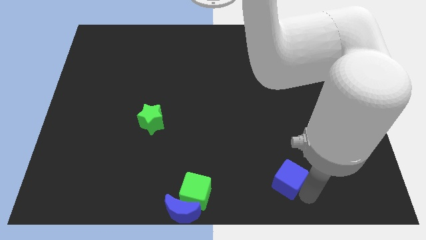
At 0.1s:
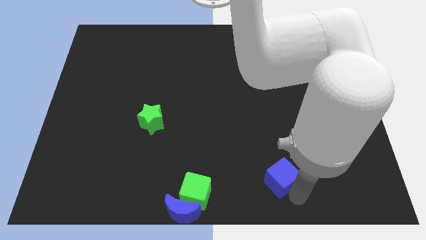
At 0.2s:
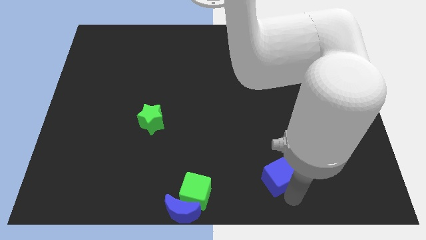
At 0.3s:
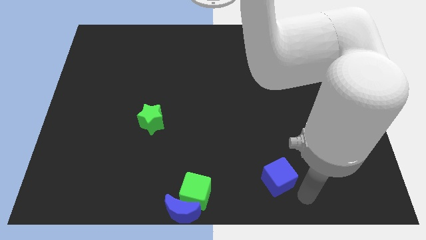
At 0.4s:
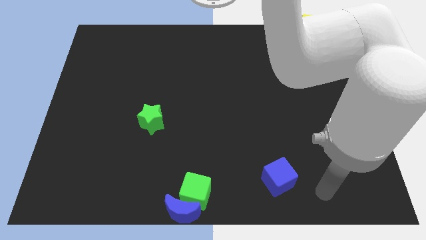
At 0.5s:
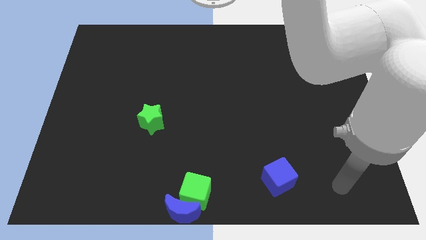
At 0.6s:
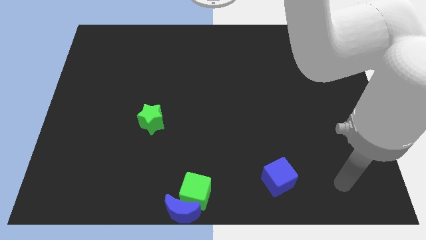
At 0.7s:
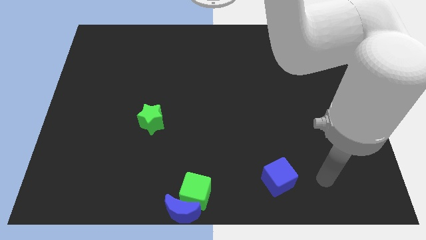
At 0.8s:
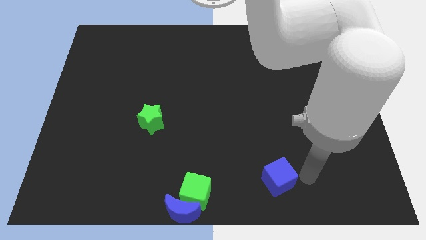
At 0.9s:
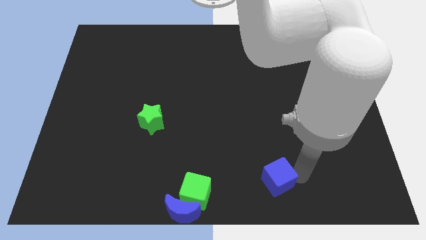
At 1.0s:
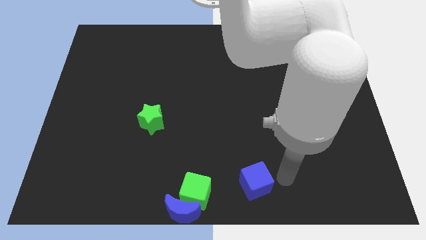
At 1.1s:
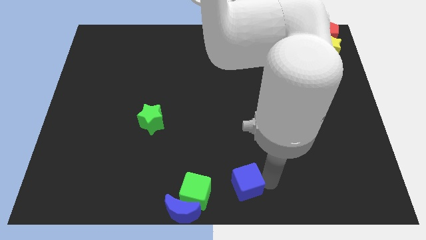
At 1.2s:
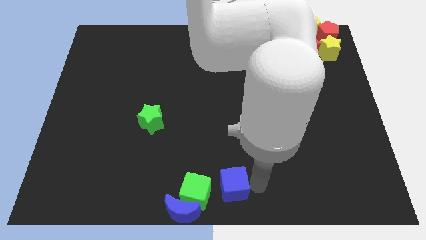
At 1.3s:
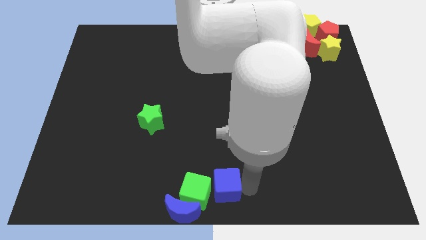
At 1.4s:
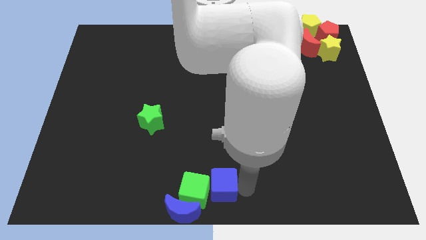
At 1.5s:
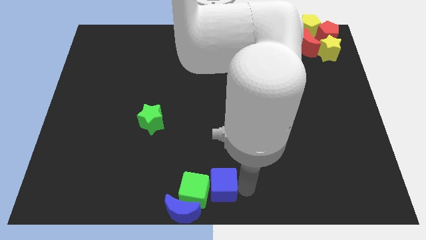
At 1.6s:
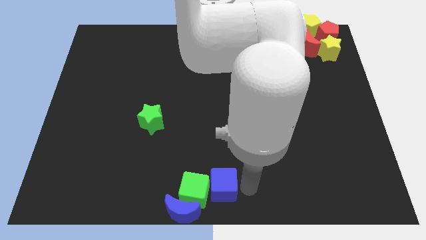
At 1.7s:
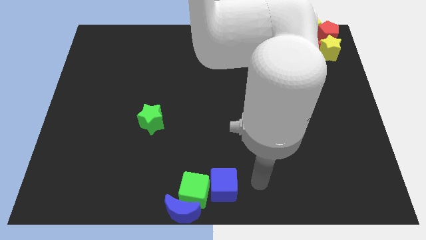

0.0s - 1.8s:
push the blue cube close to green cube

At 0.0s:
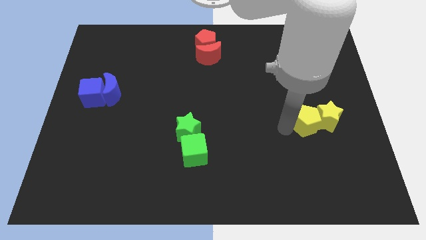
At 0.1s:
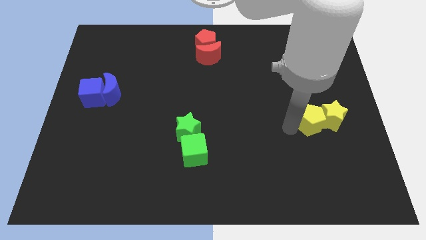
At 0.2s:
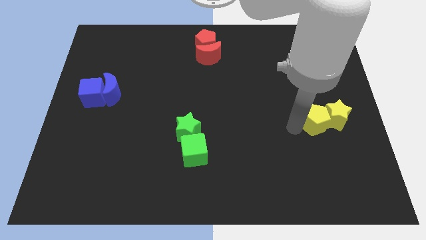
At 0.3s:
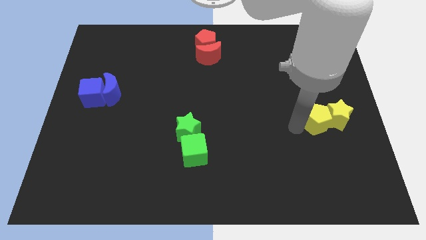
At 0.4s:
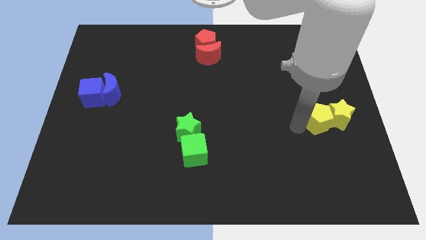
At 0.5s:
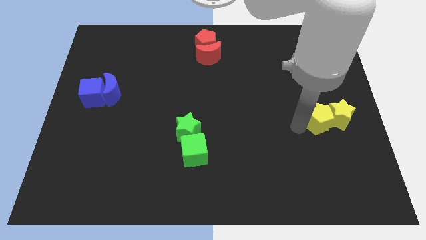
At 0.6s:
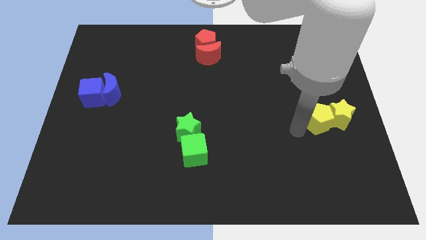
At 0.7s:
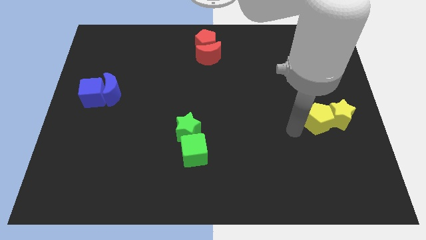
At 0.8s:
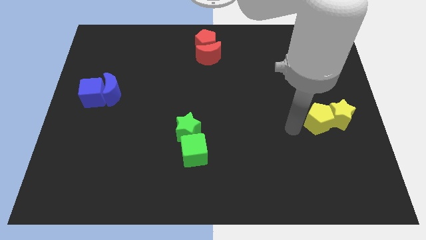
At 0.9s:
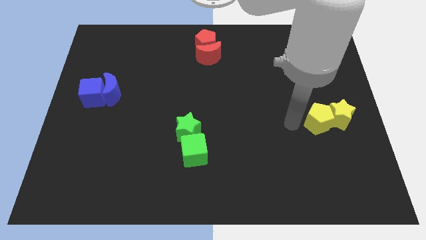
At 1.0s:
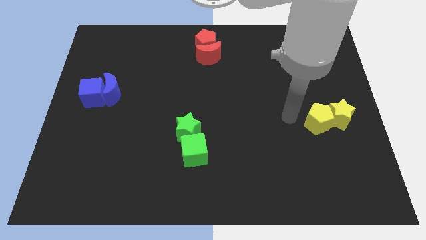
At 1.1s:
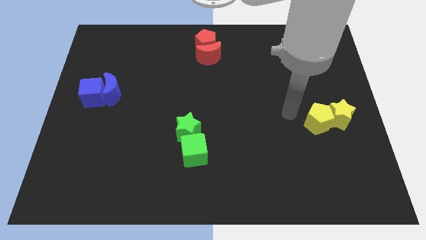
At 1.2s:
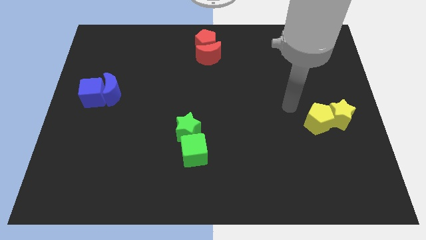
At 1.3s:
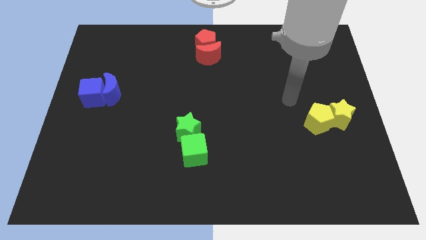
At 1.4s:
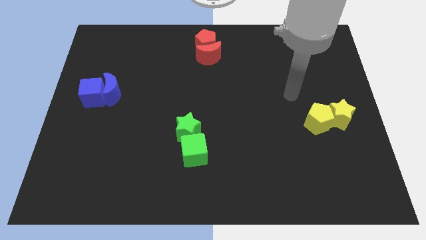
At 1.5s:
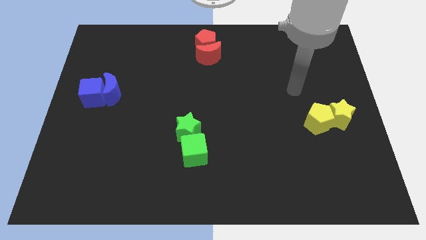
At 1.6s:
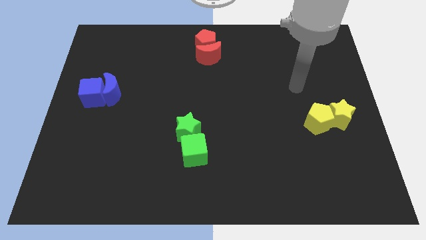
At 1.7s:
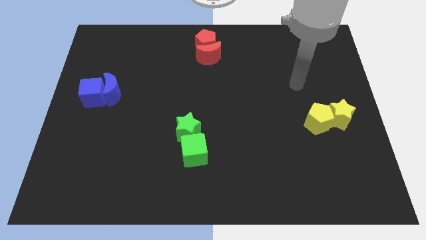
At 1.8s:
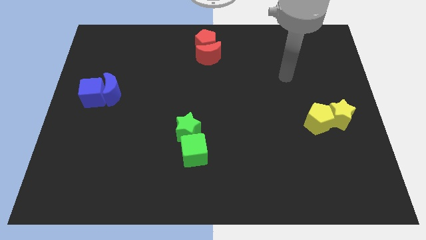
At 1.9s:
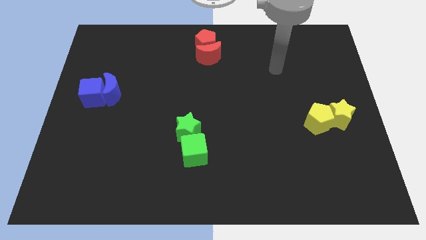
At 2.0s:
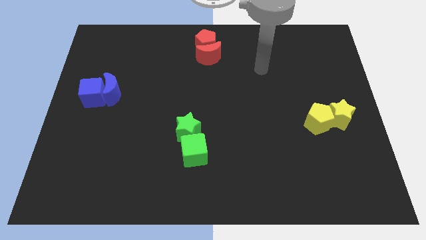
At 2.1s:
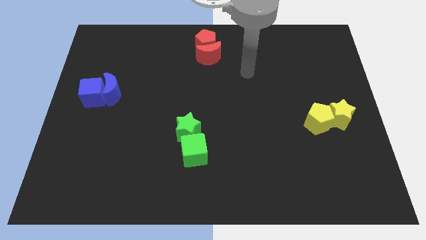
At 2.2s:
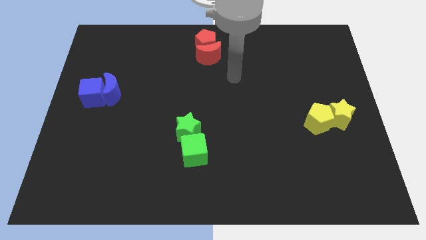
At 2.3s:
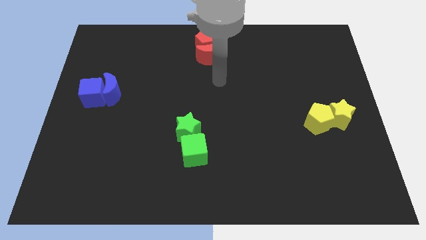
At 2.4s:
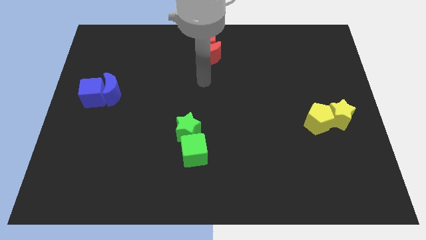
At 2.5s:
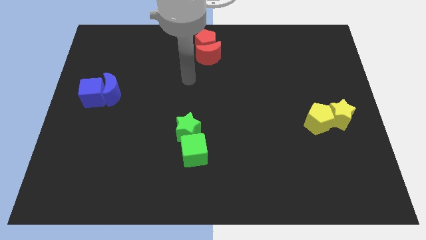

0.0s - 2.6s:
move away the arm from the yellow pentagon

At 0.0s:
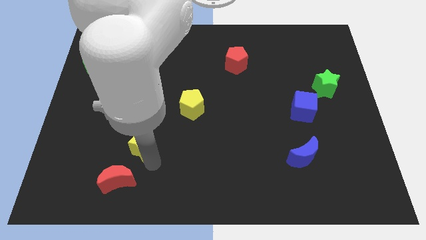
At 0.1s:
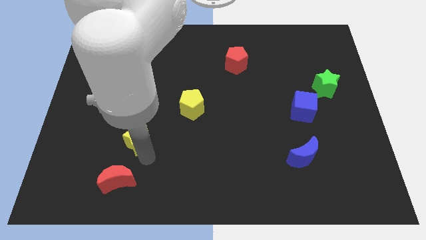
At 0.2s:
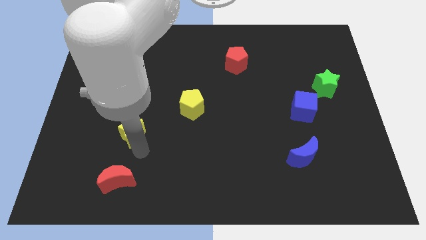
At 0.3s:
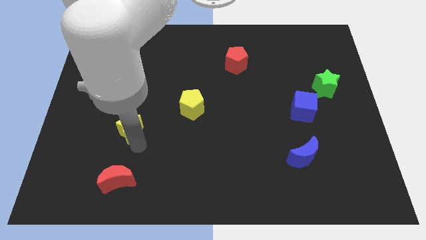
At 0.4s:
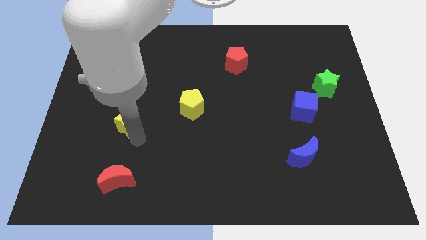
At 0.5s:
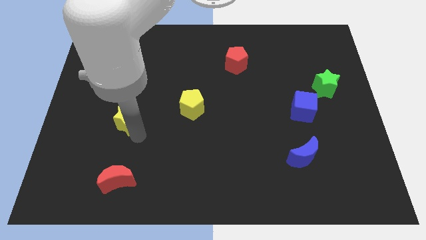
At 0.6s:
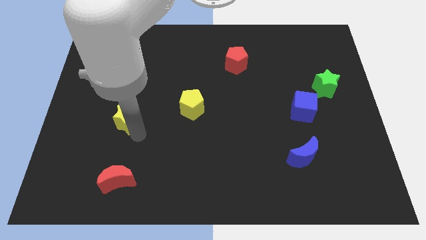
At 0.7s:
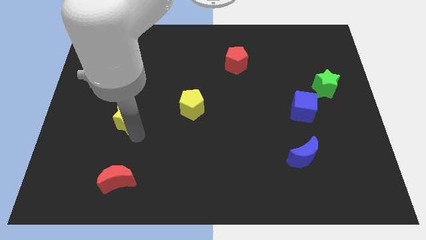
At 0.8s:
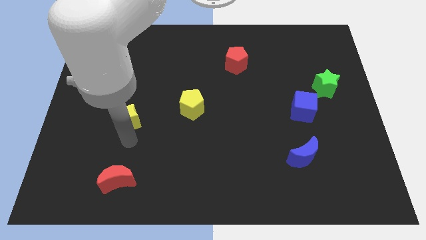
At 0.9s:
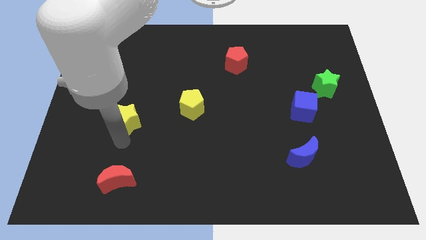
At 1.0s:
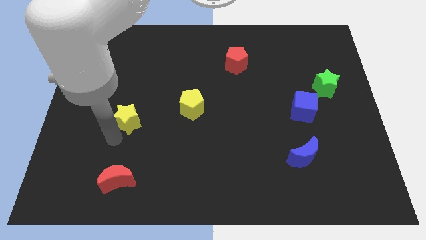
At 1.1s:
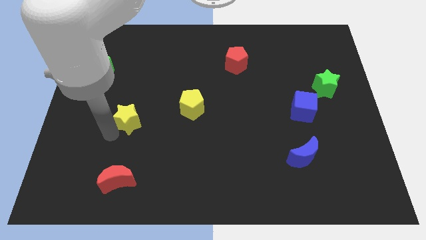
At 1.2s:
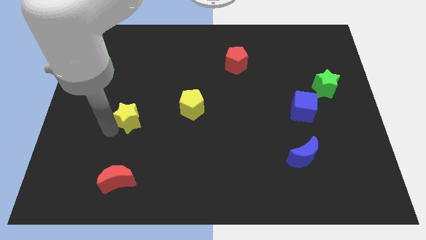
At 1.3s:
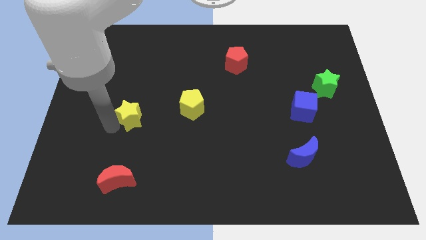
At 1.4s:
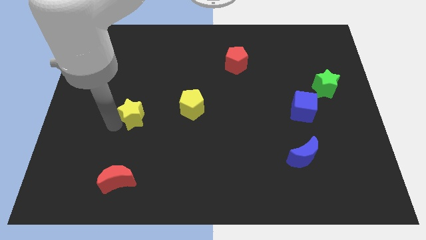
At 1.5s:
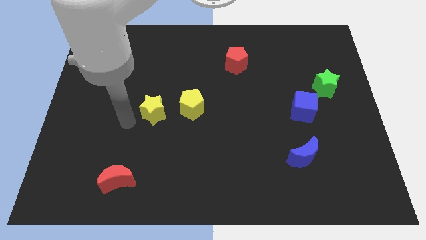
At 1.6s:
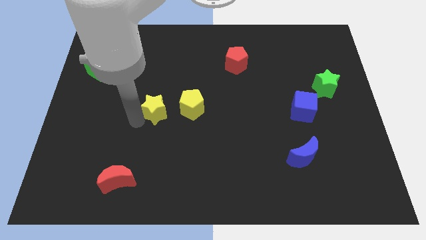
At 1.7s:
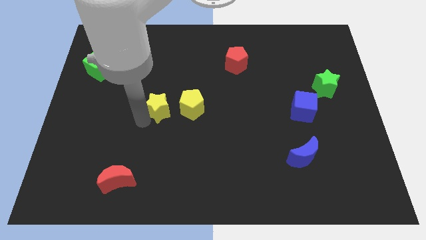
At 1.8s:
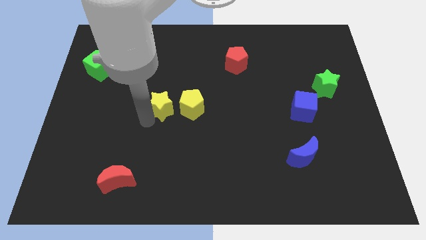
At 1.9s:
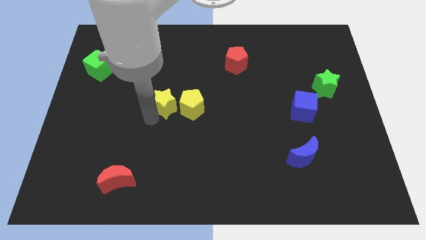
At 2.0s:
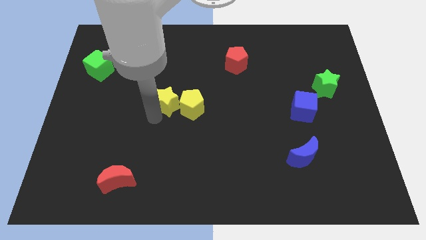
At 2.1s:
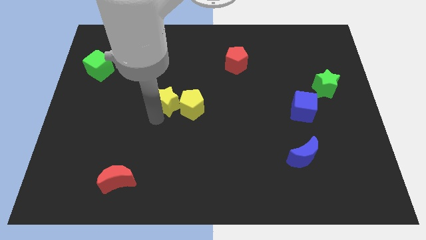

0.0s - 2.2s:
move the yellow star close to the left of the yellow pentagon

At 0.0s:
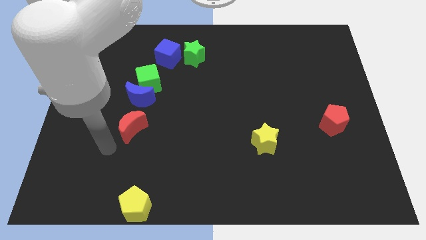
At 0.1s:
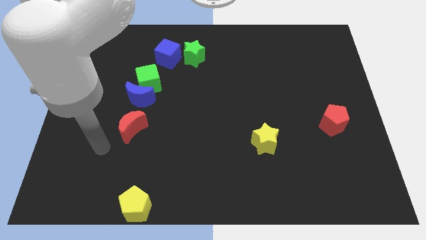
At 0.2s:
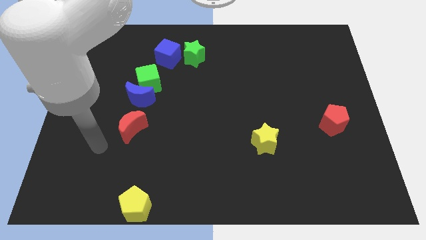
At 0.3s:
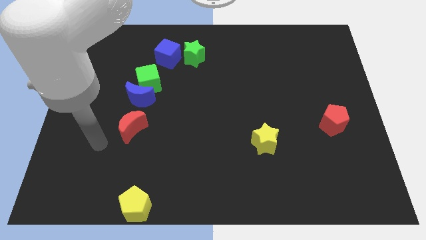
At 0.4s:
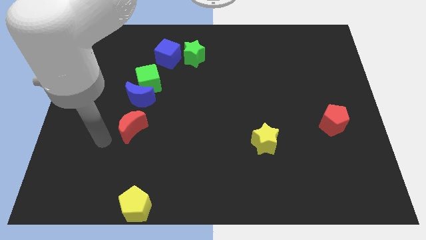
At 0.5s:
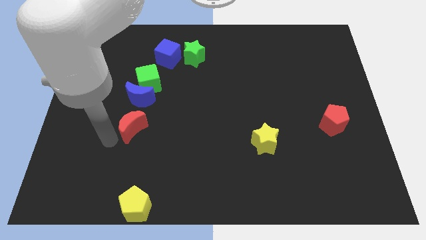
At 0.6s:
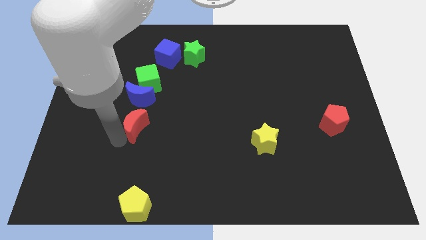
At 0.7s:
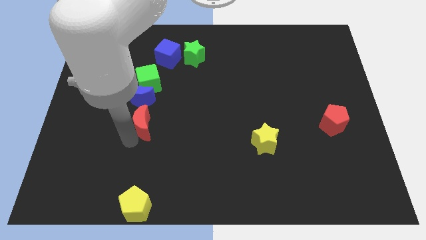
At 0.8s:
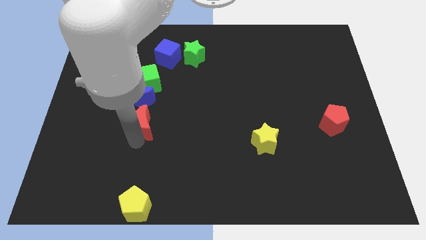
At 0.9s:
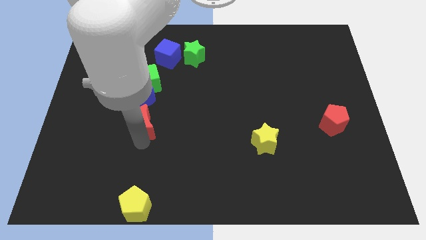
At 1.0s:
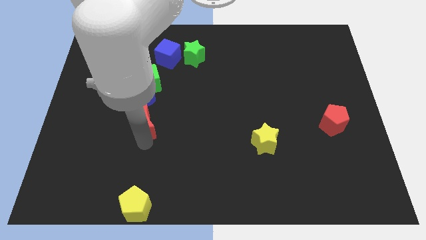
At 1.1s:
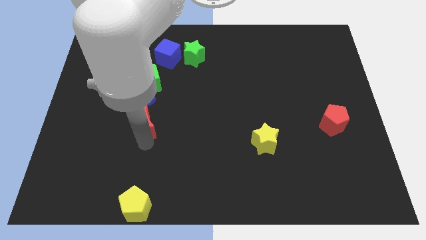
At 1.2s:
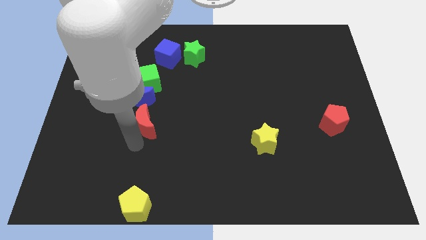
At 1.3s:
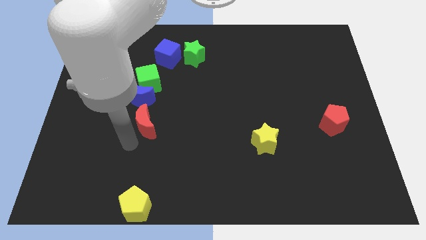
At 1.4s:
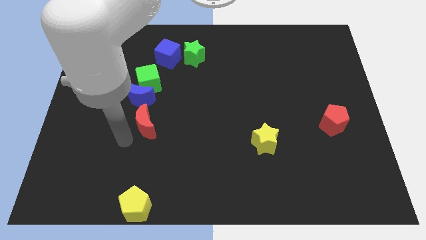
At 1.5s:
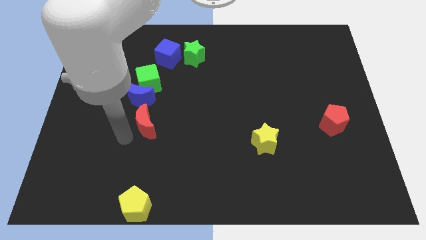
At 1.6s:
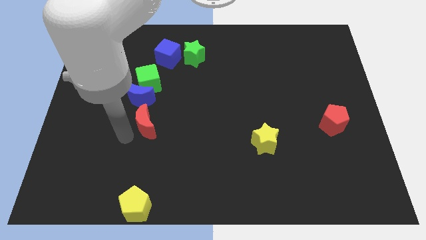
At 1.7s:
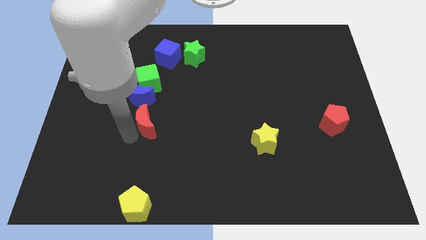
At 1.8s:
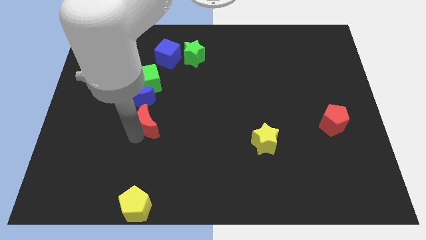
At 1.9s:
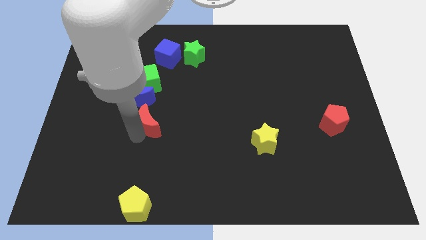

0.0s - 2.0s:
push the red moon towards the center

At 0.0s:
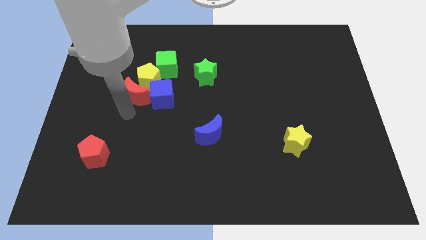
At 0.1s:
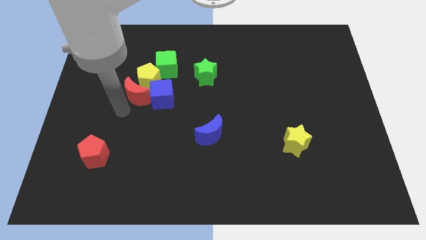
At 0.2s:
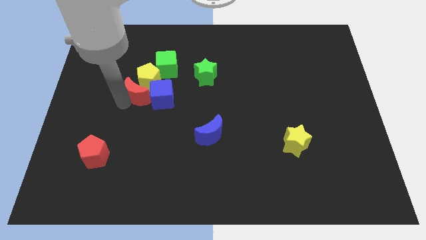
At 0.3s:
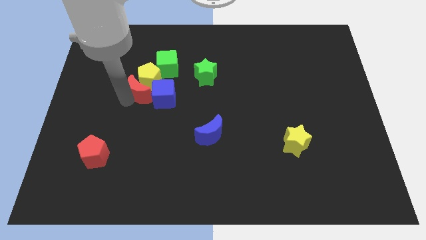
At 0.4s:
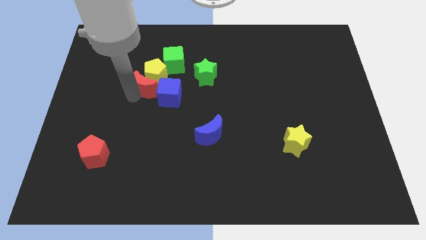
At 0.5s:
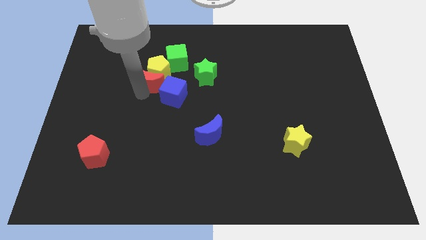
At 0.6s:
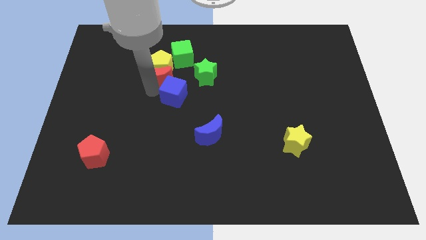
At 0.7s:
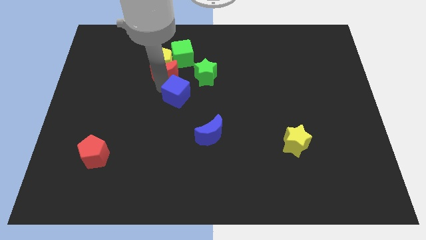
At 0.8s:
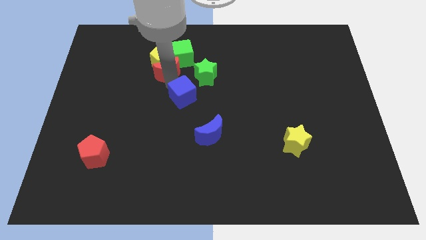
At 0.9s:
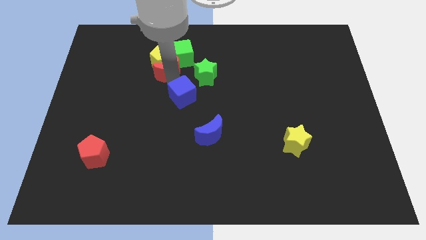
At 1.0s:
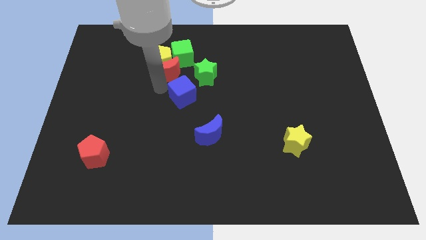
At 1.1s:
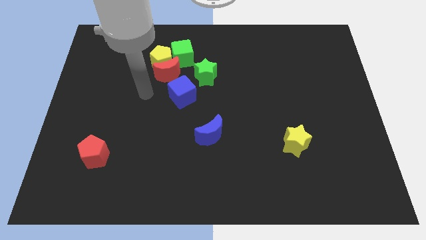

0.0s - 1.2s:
push the red crescent into yellow pentagon
